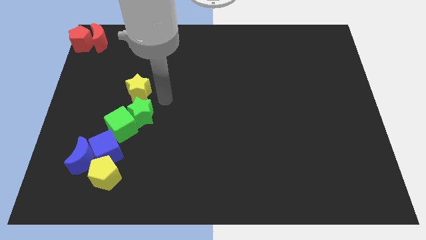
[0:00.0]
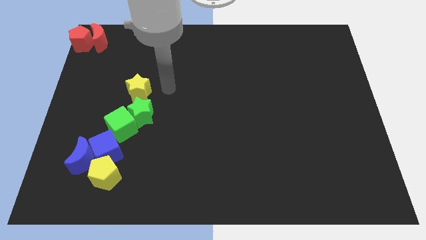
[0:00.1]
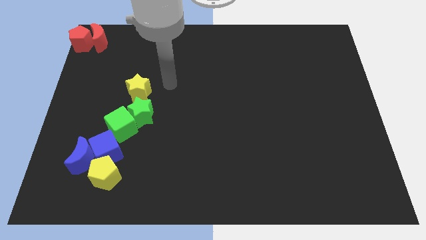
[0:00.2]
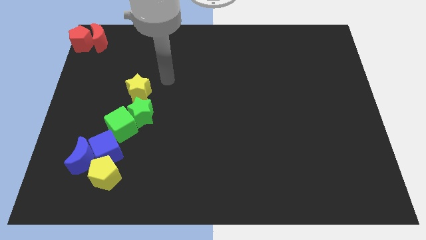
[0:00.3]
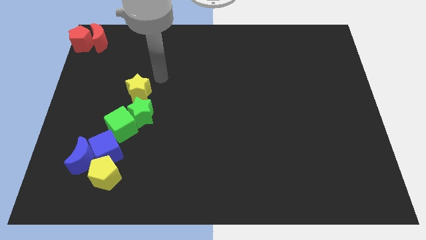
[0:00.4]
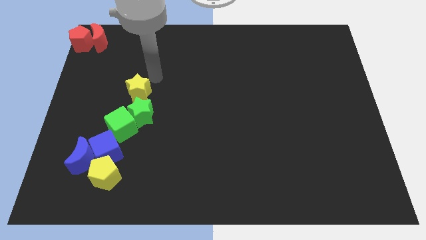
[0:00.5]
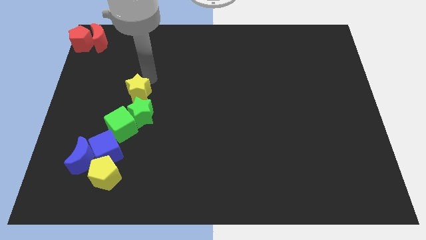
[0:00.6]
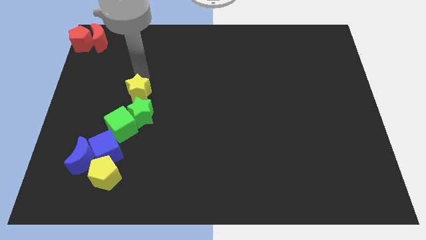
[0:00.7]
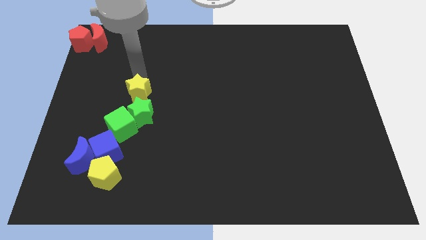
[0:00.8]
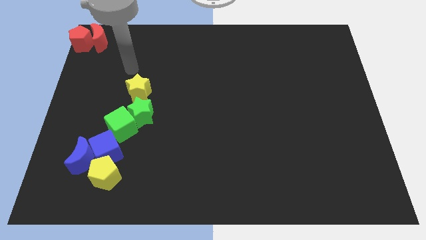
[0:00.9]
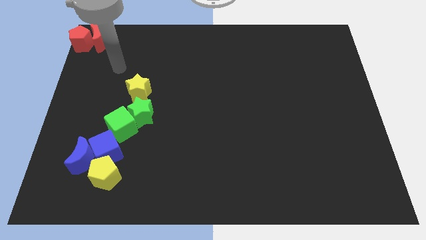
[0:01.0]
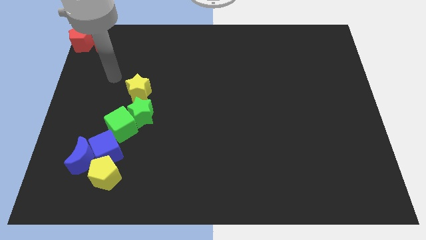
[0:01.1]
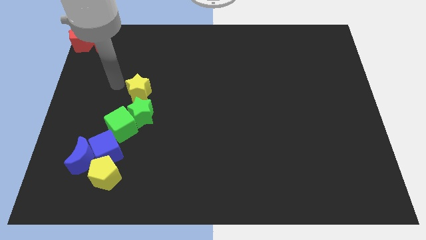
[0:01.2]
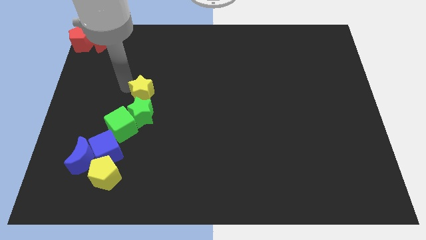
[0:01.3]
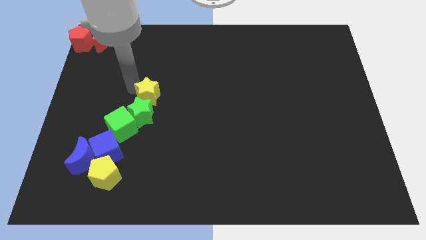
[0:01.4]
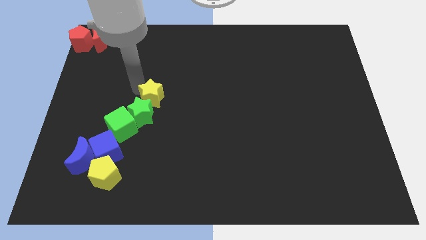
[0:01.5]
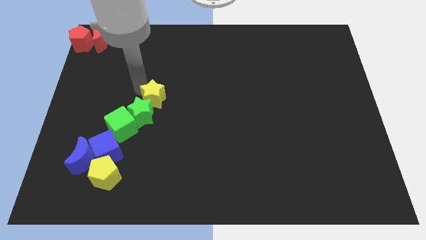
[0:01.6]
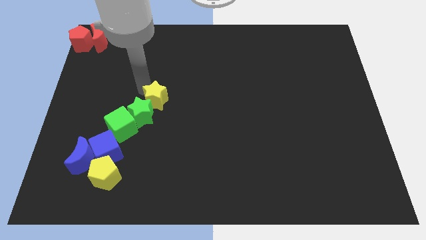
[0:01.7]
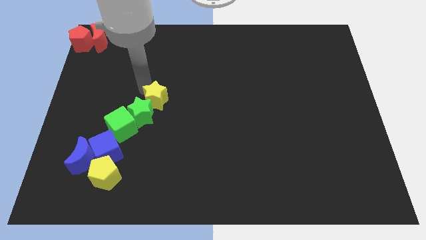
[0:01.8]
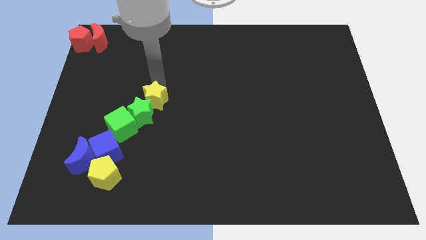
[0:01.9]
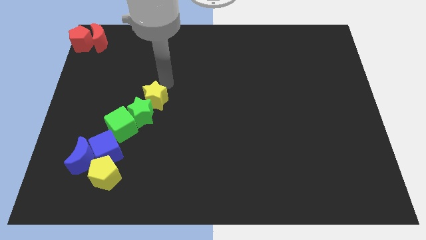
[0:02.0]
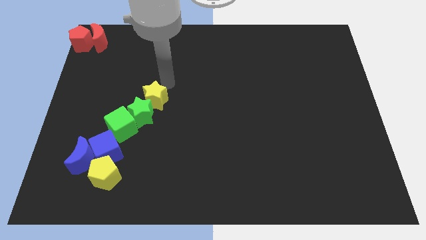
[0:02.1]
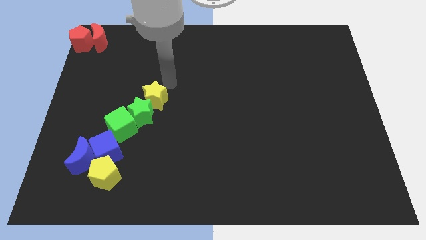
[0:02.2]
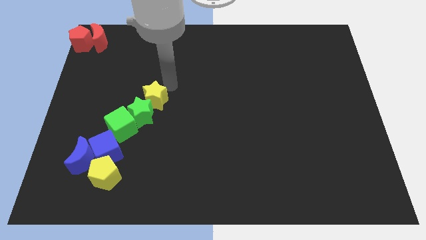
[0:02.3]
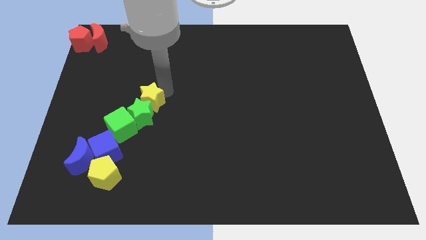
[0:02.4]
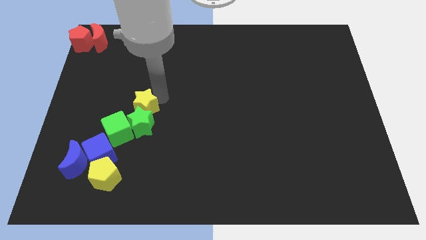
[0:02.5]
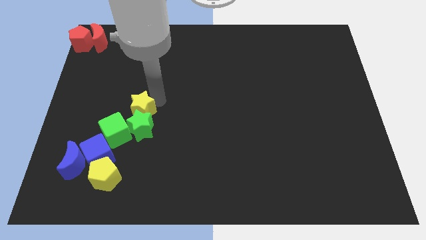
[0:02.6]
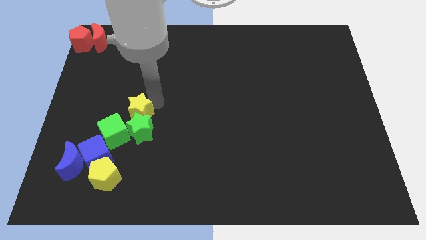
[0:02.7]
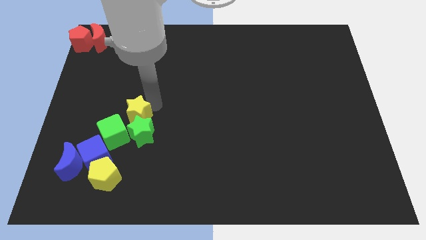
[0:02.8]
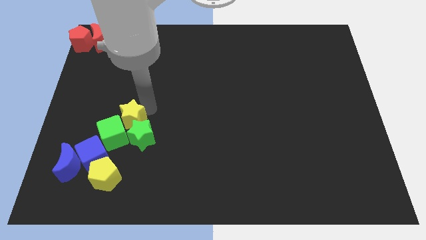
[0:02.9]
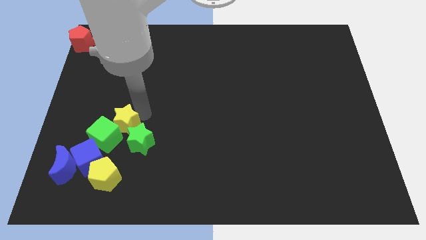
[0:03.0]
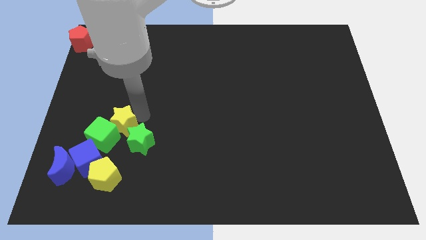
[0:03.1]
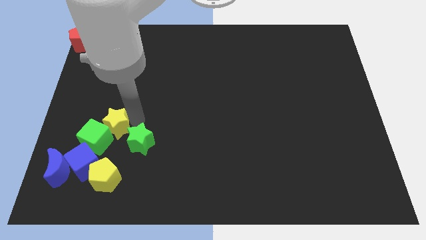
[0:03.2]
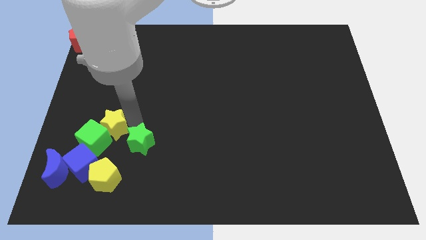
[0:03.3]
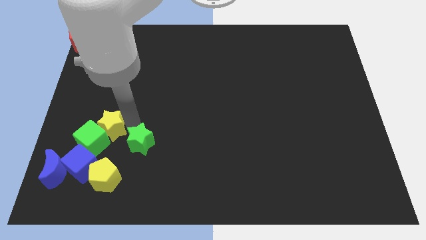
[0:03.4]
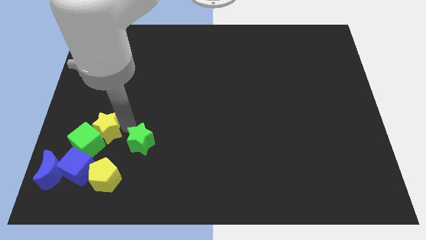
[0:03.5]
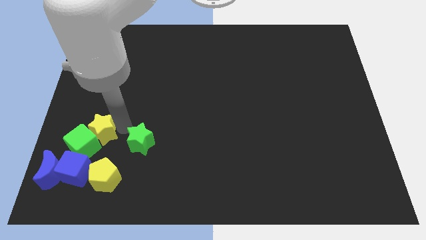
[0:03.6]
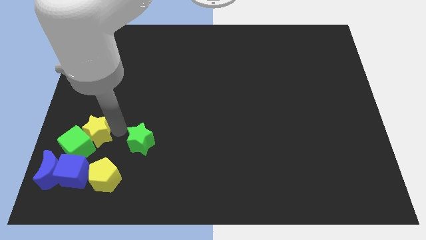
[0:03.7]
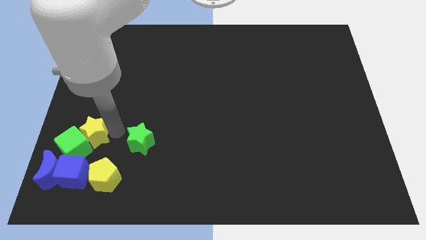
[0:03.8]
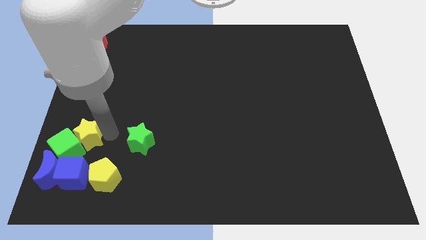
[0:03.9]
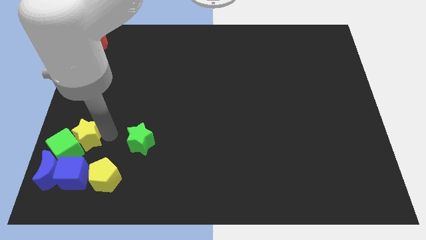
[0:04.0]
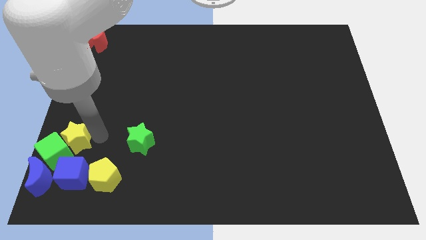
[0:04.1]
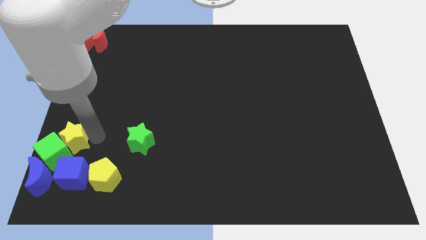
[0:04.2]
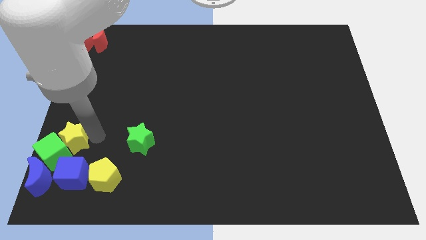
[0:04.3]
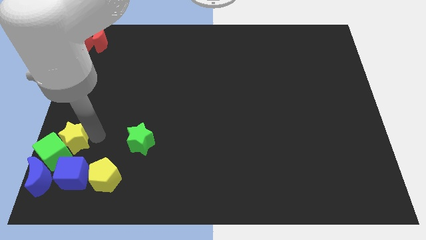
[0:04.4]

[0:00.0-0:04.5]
push yellow star into green cube to the bottom left of the board

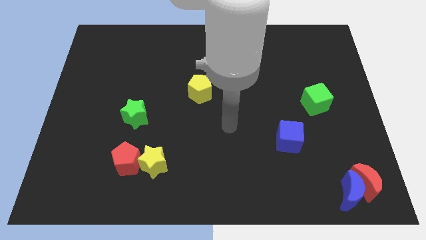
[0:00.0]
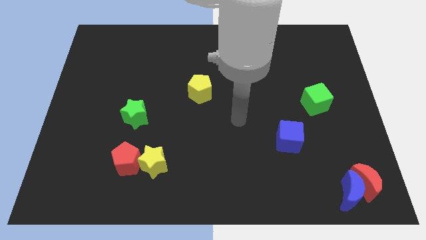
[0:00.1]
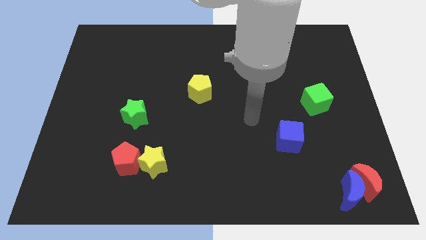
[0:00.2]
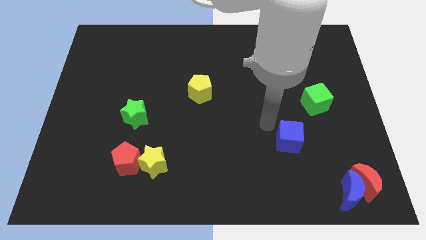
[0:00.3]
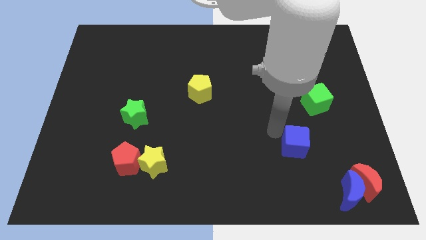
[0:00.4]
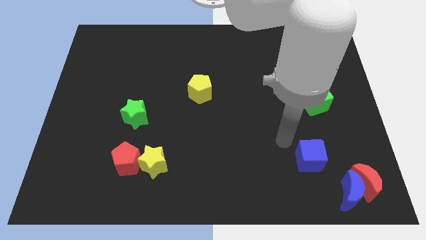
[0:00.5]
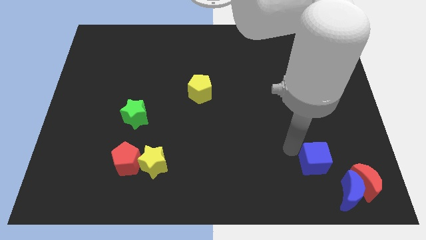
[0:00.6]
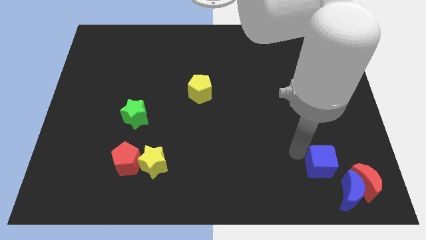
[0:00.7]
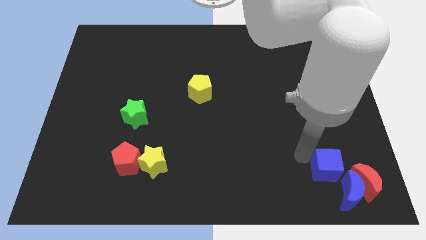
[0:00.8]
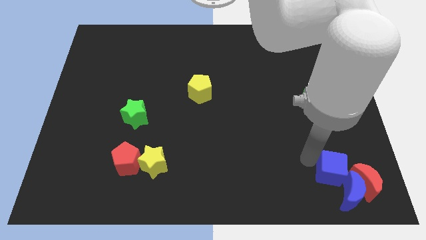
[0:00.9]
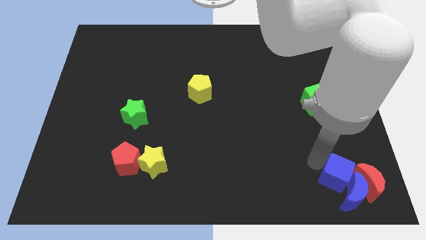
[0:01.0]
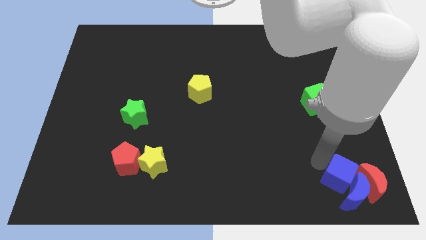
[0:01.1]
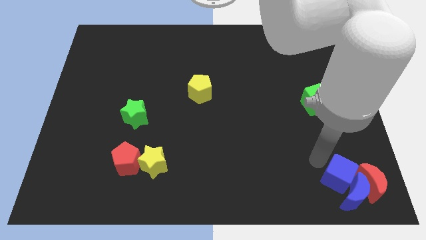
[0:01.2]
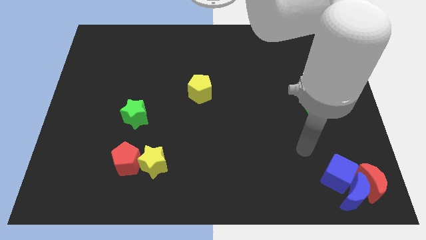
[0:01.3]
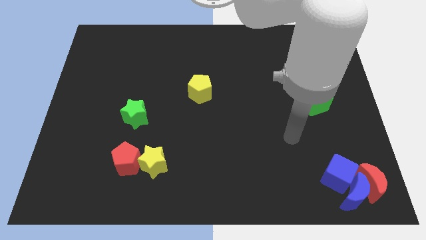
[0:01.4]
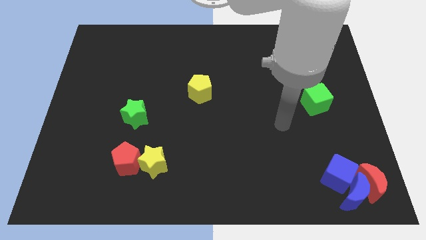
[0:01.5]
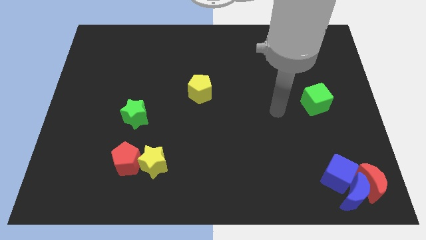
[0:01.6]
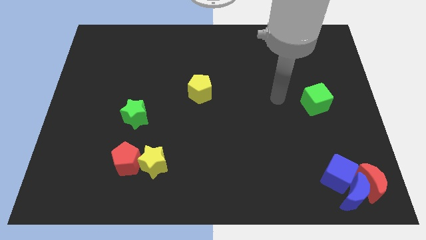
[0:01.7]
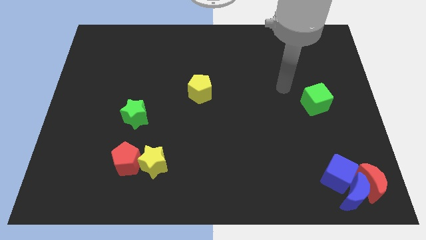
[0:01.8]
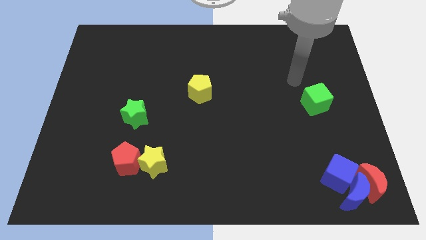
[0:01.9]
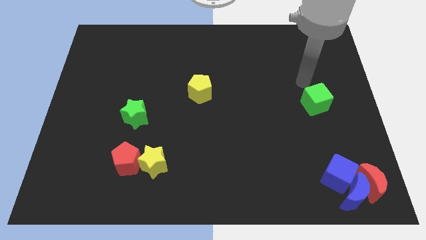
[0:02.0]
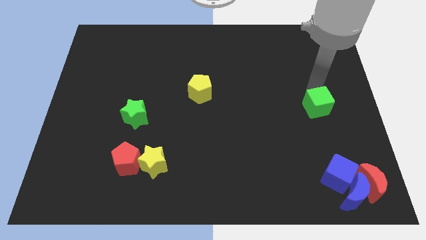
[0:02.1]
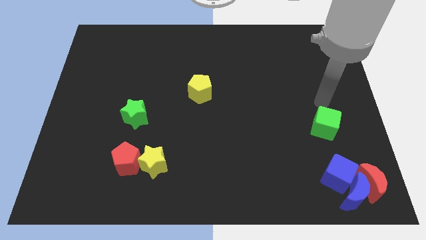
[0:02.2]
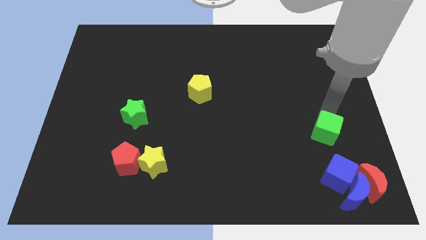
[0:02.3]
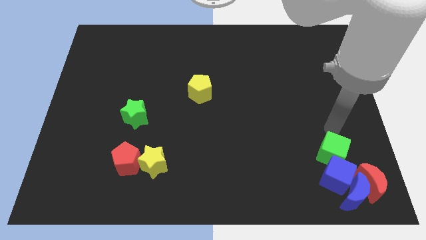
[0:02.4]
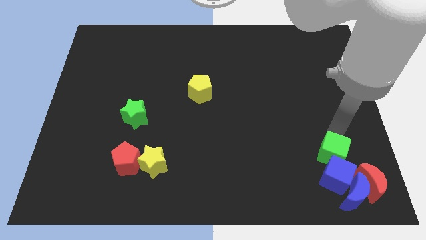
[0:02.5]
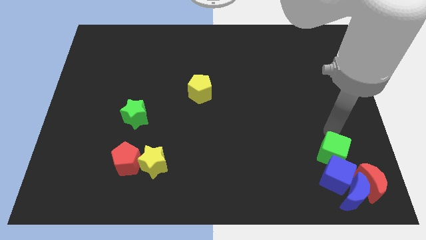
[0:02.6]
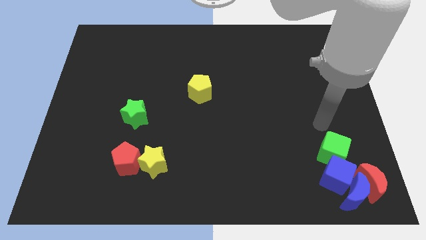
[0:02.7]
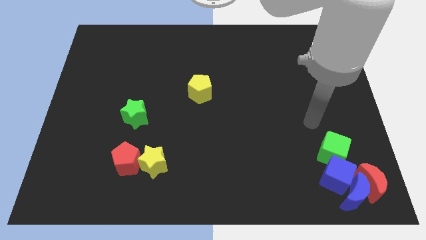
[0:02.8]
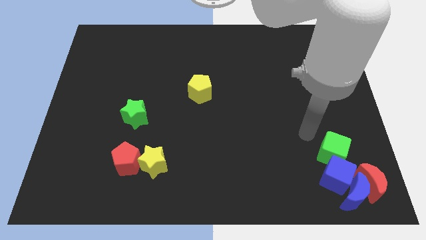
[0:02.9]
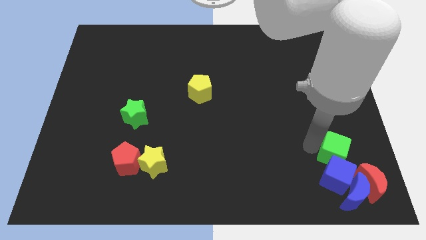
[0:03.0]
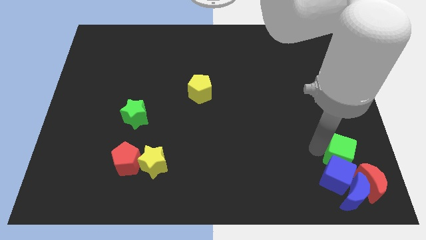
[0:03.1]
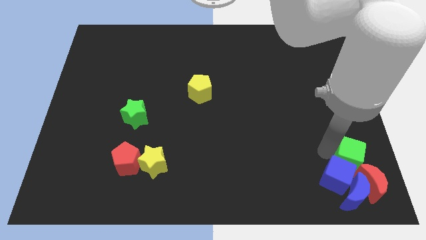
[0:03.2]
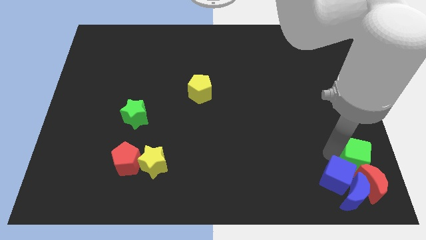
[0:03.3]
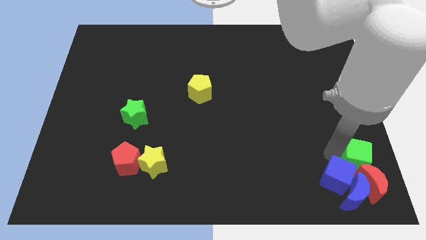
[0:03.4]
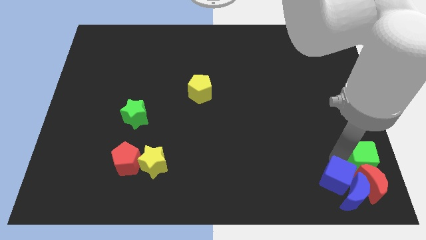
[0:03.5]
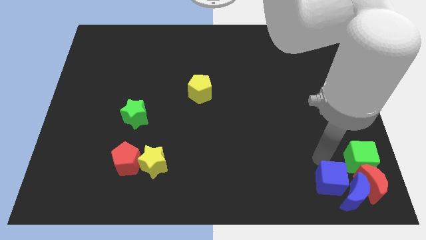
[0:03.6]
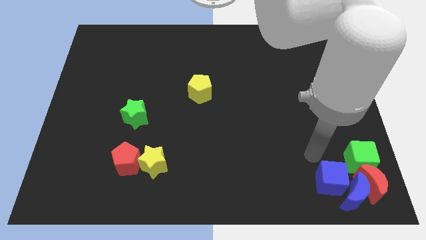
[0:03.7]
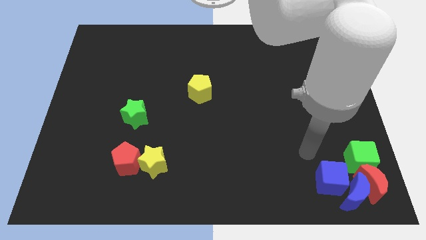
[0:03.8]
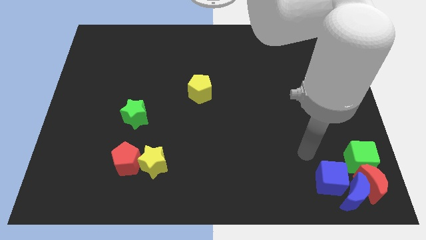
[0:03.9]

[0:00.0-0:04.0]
move the green cube above to the red crescent

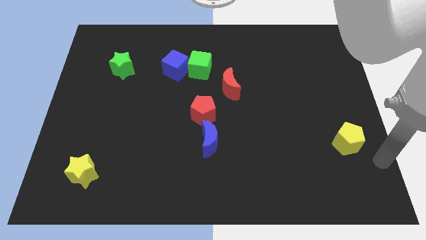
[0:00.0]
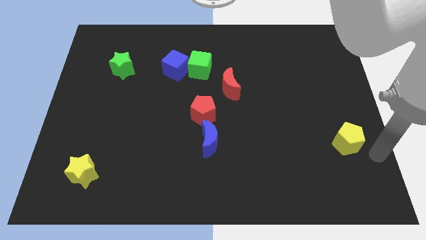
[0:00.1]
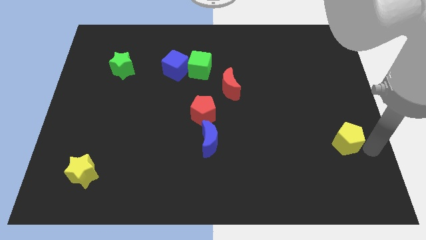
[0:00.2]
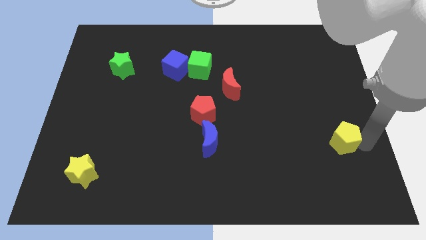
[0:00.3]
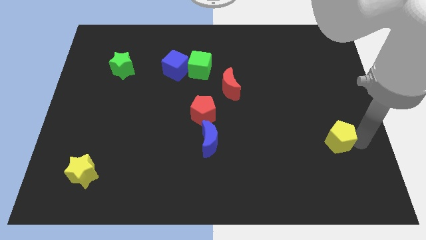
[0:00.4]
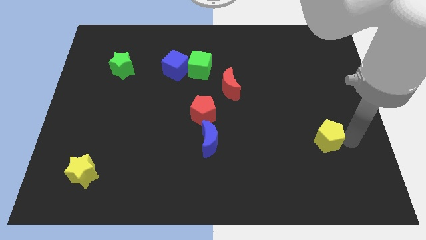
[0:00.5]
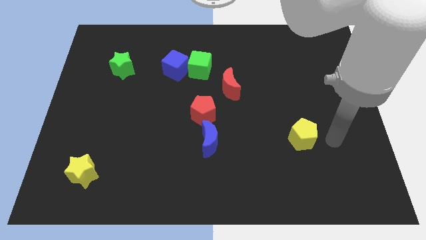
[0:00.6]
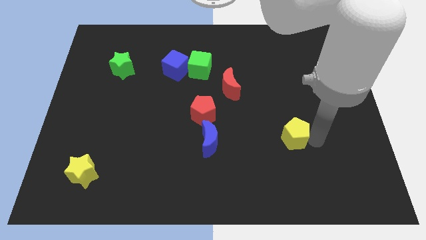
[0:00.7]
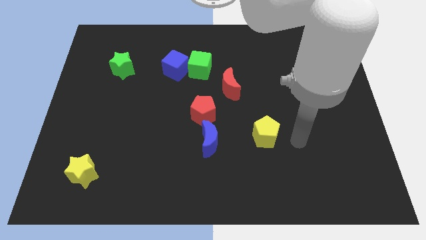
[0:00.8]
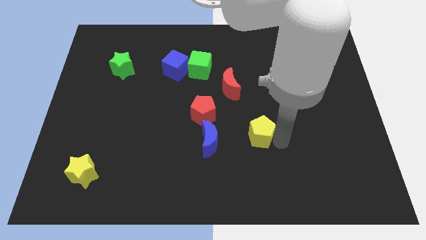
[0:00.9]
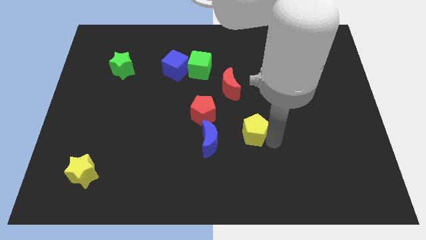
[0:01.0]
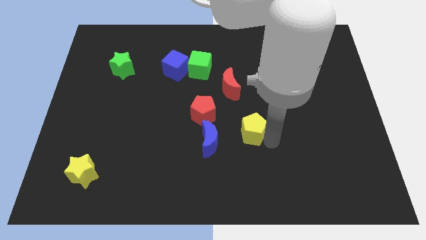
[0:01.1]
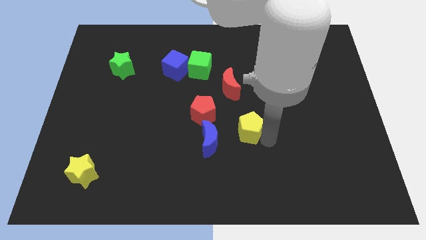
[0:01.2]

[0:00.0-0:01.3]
place yellow pentagon to the right of the blue moon
